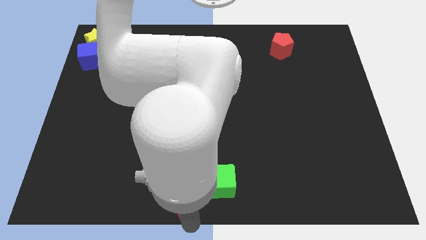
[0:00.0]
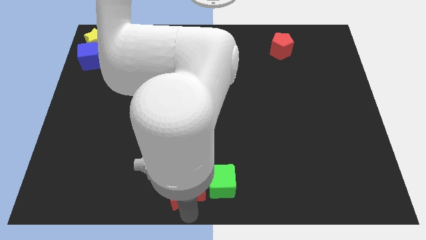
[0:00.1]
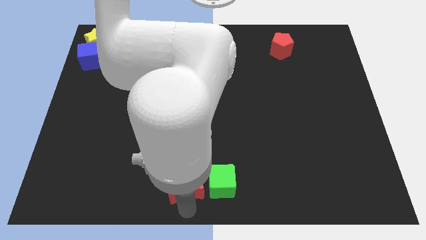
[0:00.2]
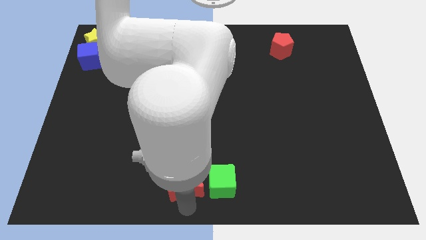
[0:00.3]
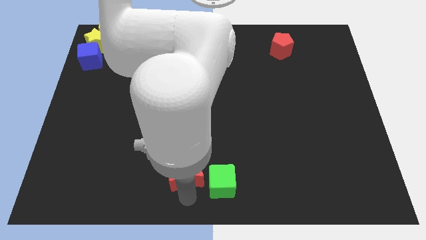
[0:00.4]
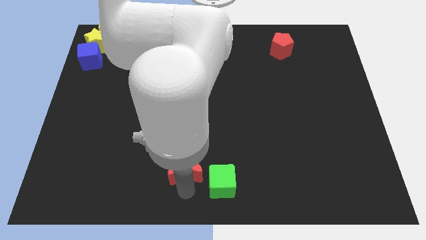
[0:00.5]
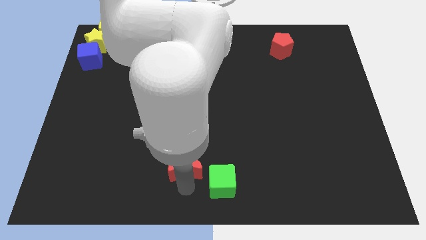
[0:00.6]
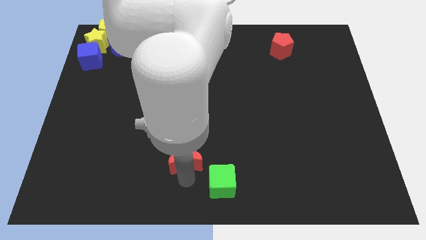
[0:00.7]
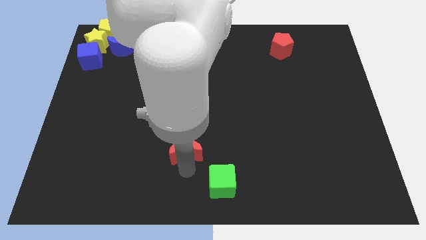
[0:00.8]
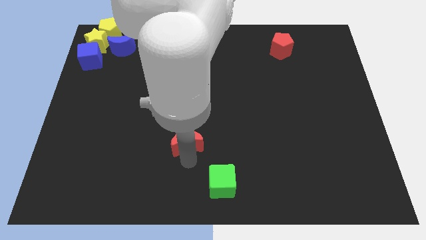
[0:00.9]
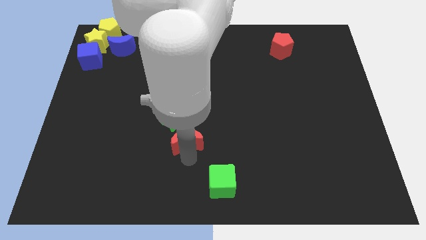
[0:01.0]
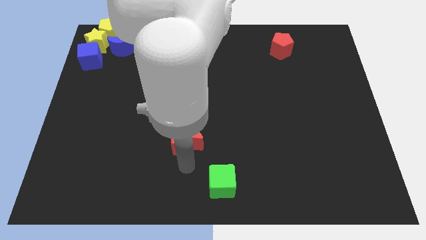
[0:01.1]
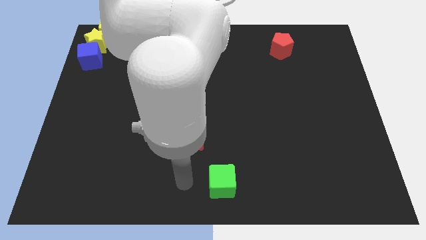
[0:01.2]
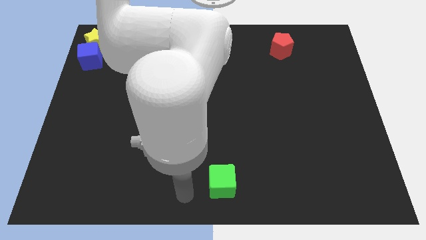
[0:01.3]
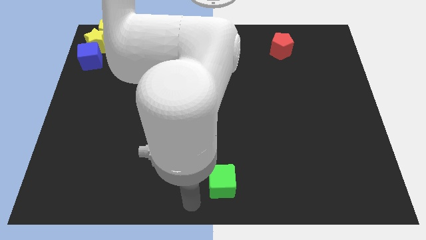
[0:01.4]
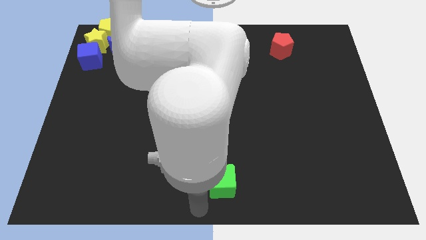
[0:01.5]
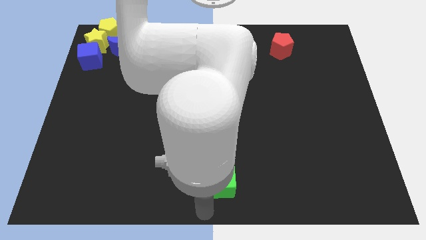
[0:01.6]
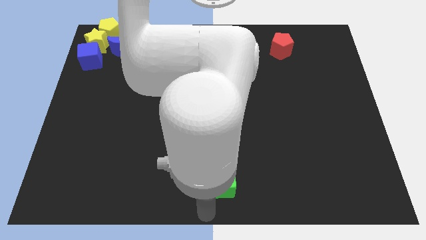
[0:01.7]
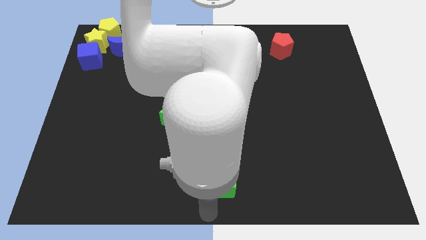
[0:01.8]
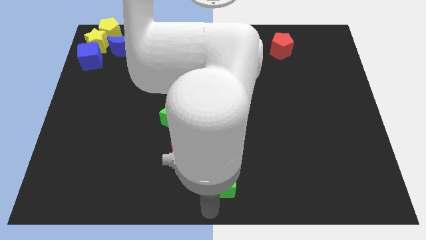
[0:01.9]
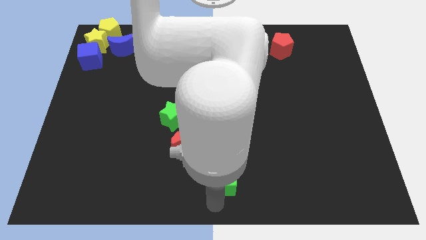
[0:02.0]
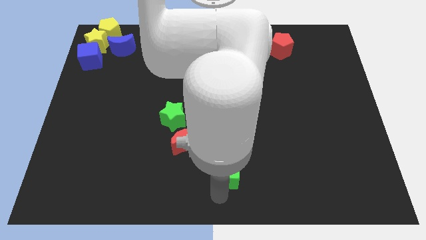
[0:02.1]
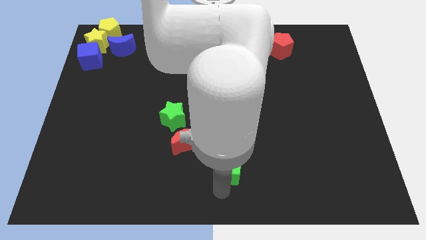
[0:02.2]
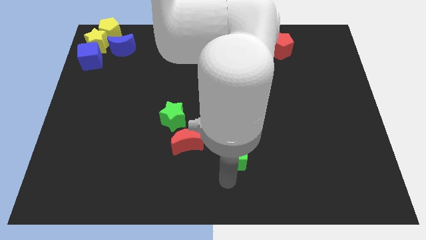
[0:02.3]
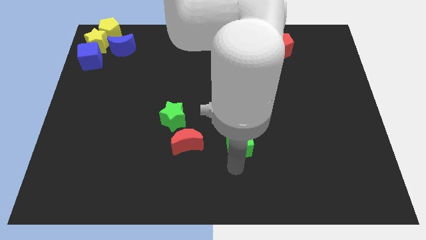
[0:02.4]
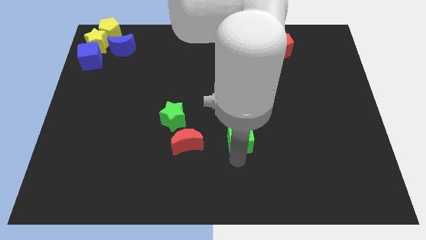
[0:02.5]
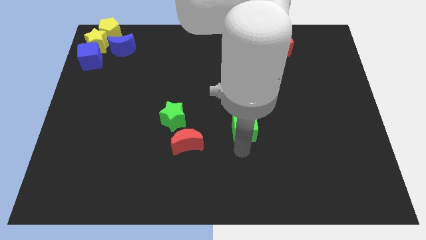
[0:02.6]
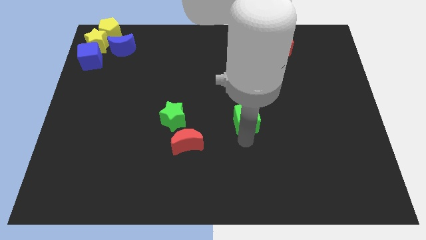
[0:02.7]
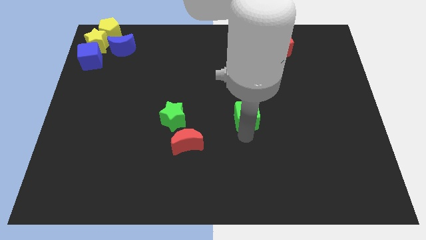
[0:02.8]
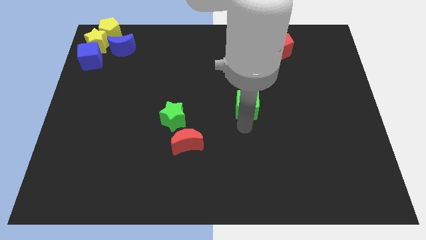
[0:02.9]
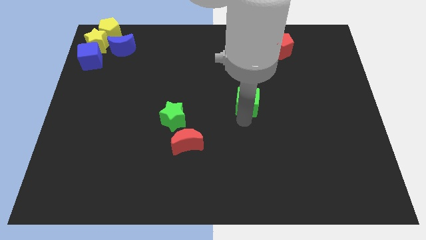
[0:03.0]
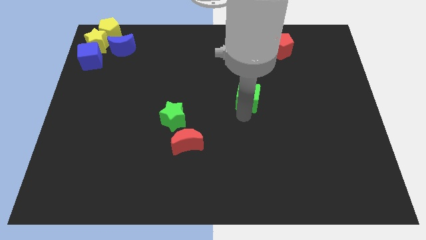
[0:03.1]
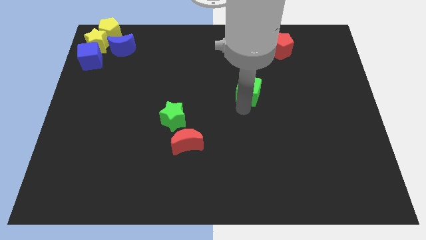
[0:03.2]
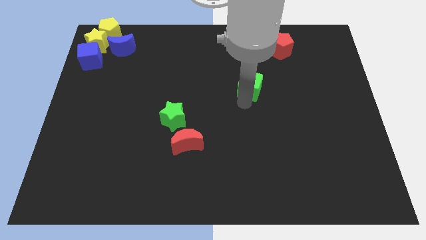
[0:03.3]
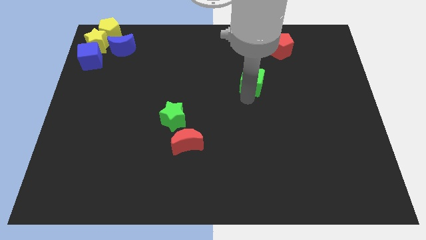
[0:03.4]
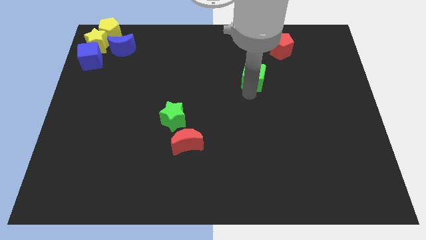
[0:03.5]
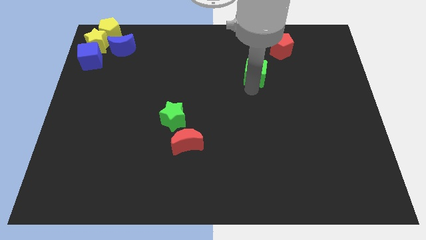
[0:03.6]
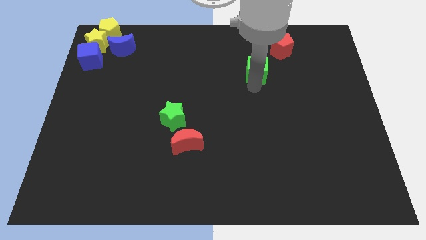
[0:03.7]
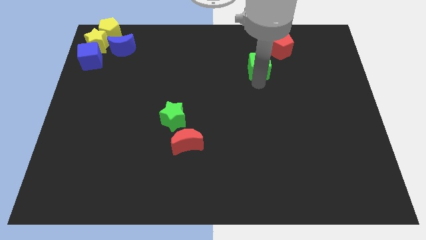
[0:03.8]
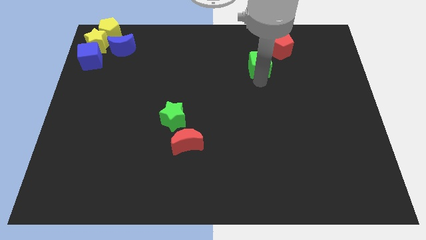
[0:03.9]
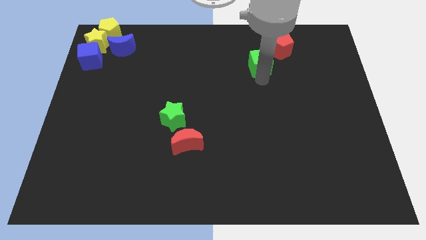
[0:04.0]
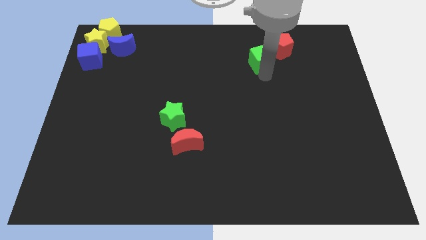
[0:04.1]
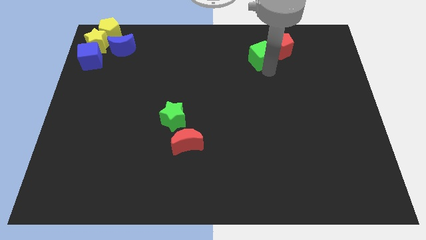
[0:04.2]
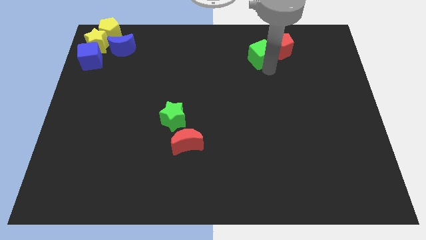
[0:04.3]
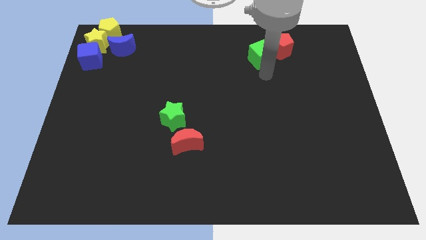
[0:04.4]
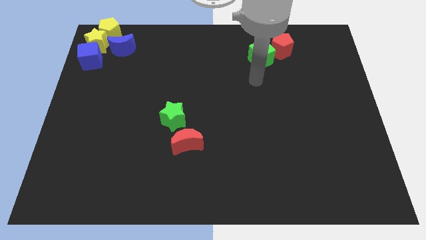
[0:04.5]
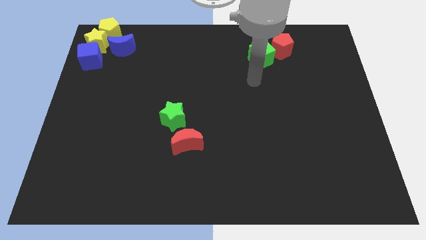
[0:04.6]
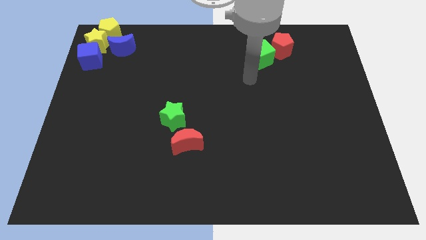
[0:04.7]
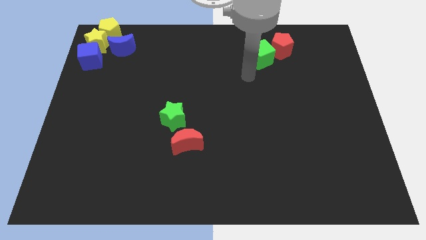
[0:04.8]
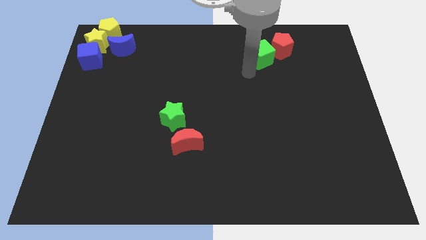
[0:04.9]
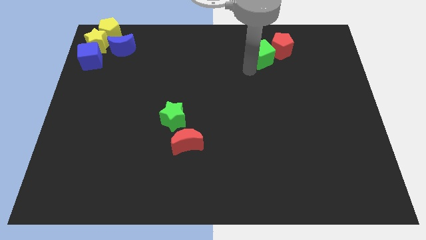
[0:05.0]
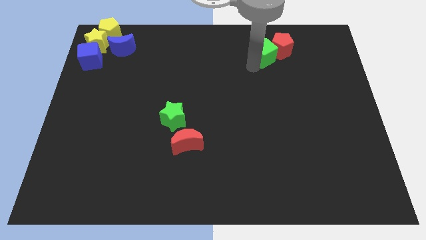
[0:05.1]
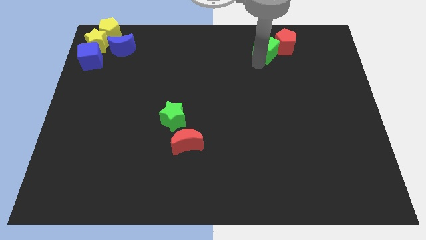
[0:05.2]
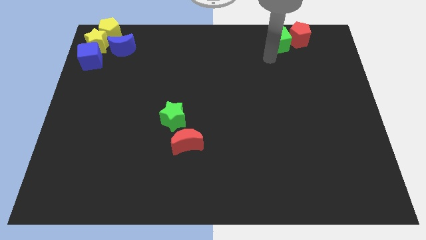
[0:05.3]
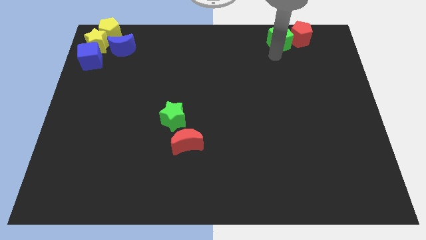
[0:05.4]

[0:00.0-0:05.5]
push the green cube into the red pentagon

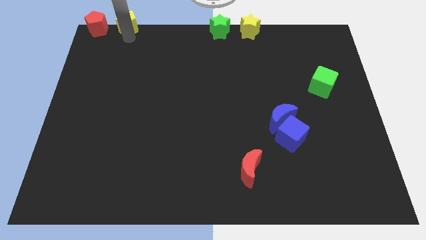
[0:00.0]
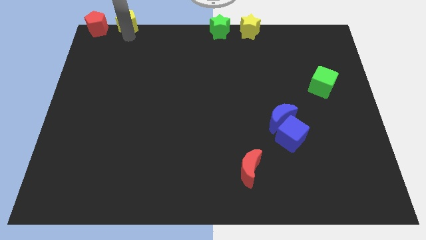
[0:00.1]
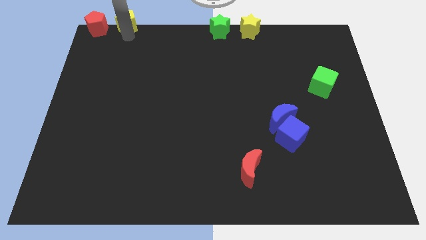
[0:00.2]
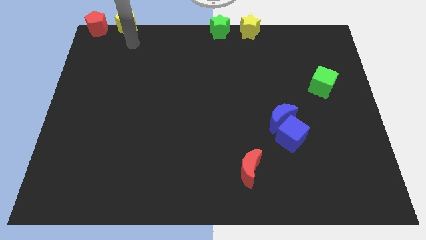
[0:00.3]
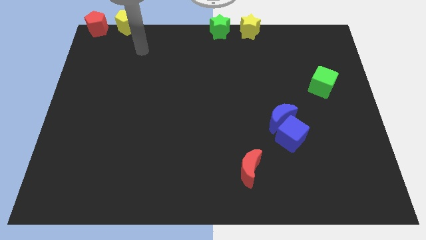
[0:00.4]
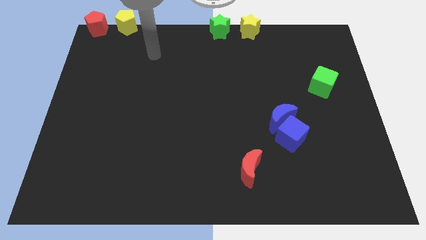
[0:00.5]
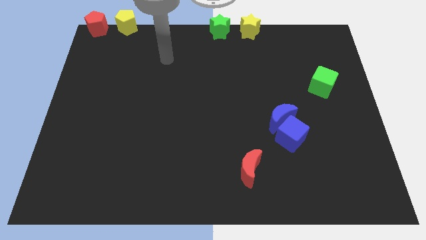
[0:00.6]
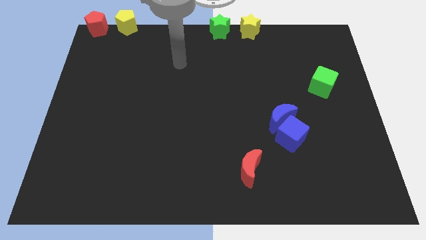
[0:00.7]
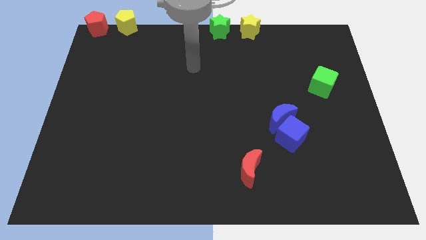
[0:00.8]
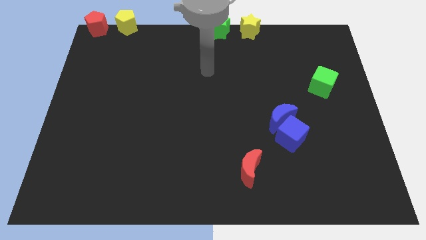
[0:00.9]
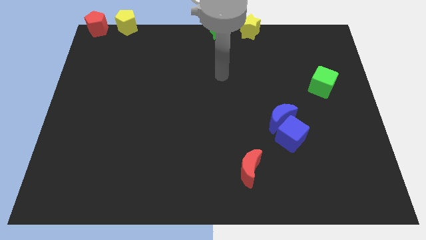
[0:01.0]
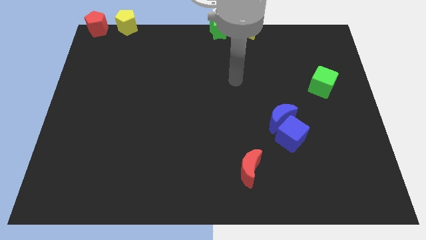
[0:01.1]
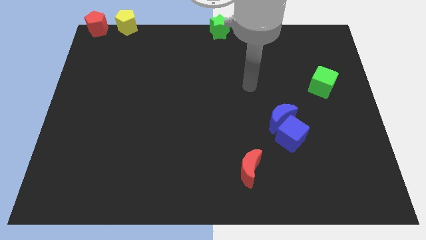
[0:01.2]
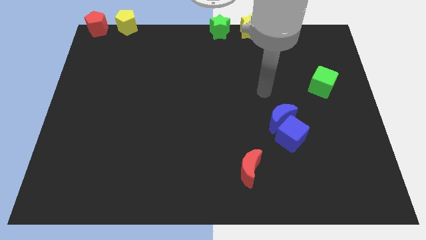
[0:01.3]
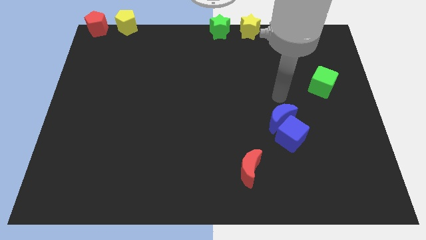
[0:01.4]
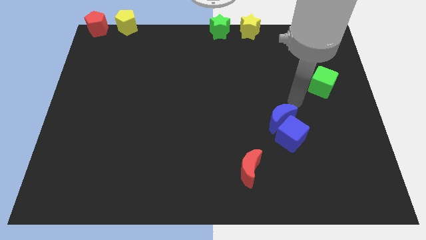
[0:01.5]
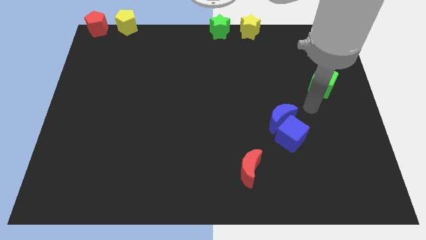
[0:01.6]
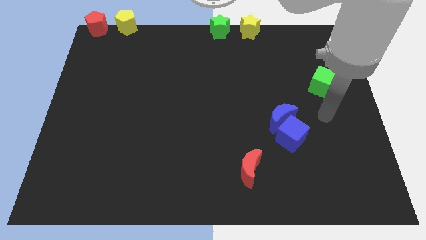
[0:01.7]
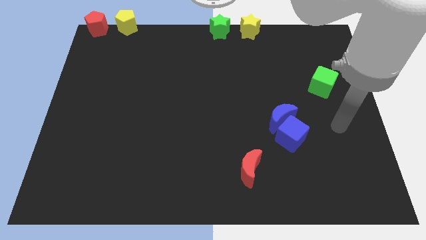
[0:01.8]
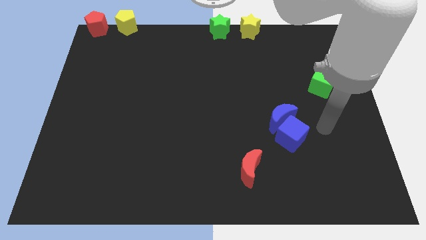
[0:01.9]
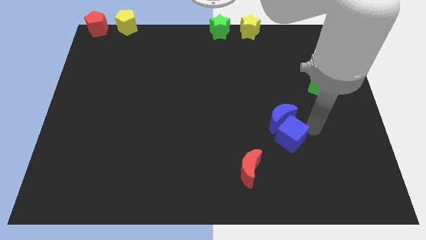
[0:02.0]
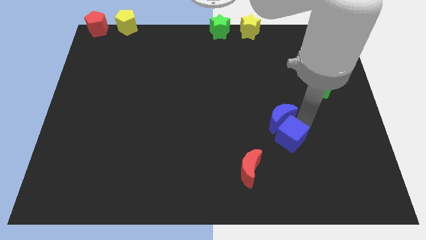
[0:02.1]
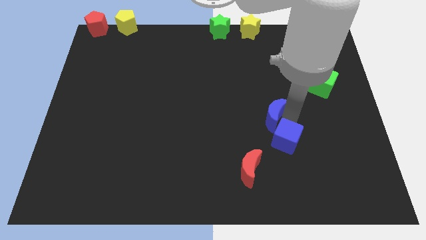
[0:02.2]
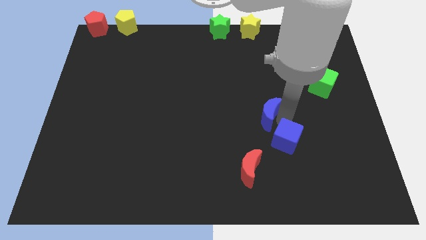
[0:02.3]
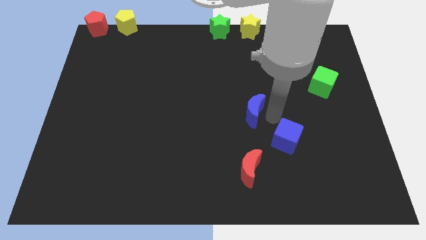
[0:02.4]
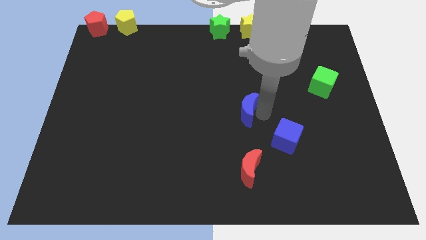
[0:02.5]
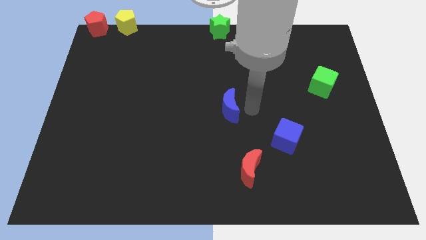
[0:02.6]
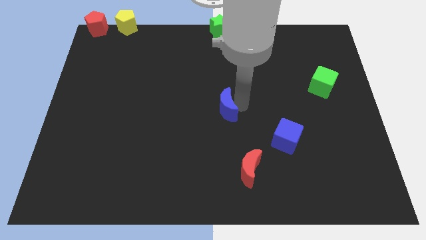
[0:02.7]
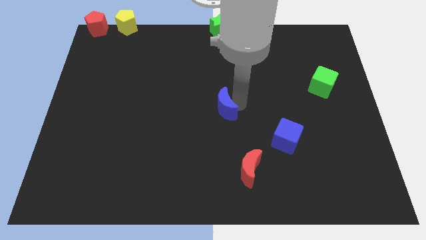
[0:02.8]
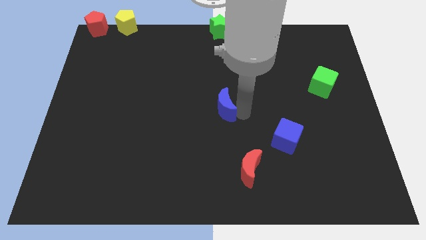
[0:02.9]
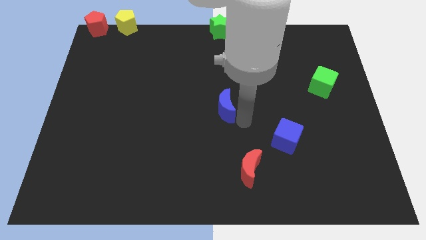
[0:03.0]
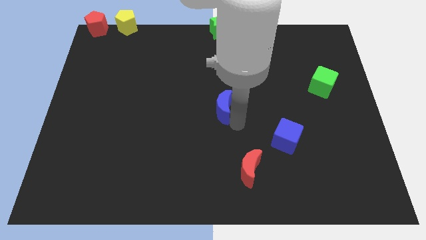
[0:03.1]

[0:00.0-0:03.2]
drag blue moon towards middle of the board

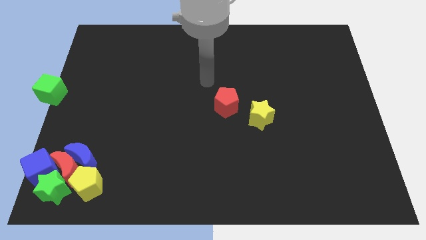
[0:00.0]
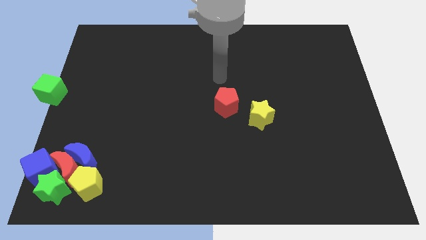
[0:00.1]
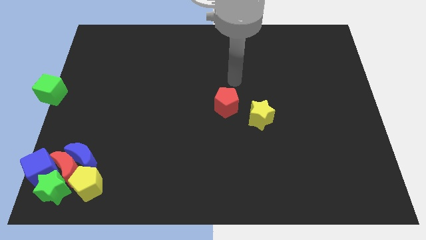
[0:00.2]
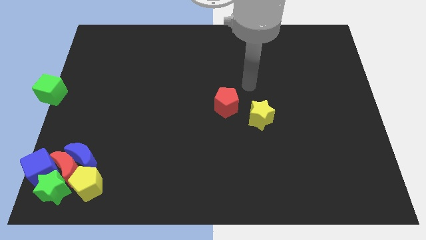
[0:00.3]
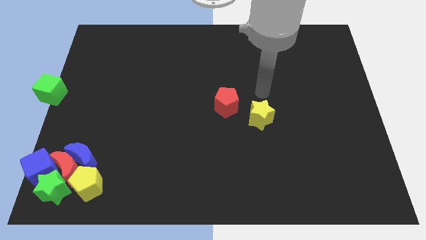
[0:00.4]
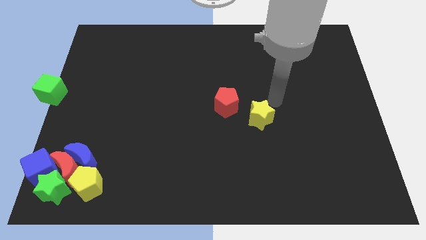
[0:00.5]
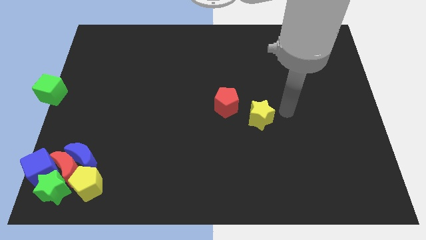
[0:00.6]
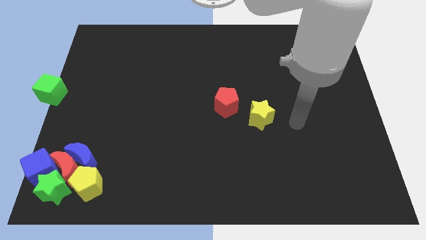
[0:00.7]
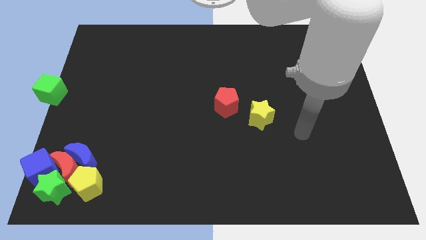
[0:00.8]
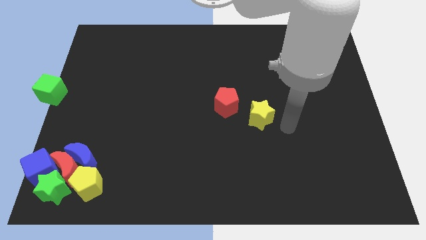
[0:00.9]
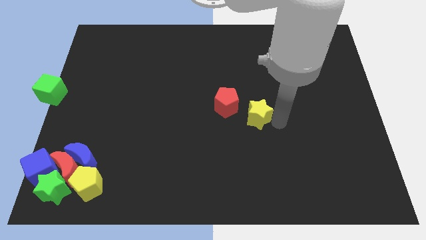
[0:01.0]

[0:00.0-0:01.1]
move your arm to the right of the yellow star
